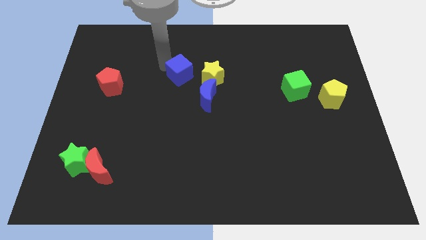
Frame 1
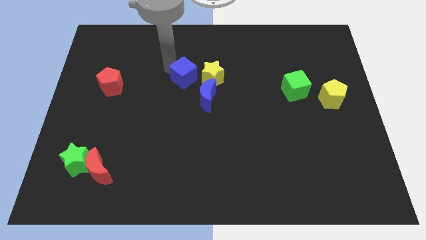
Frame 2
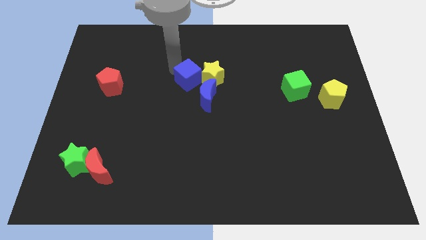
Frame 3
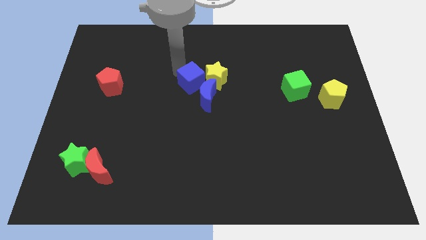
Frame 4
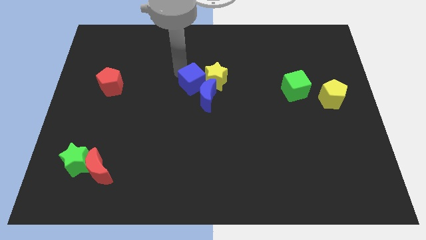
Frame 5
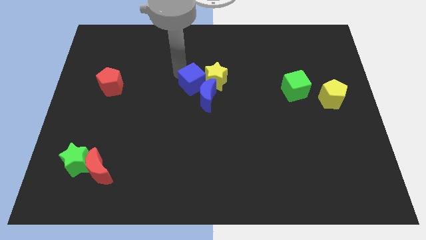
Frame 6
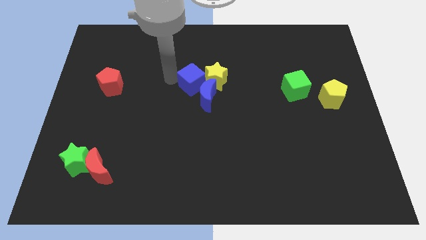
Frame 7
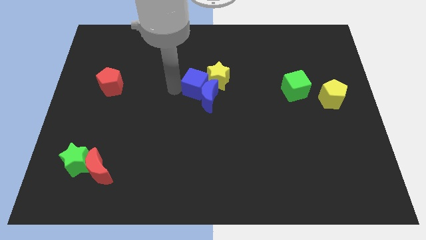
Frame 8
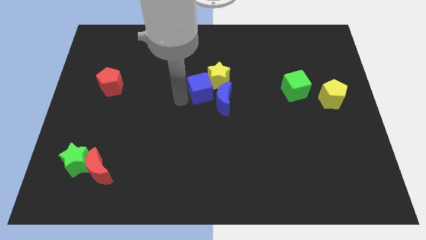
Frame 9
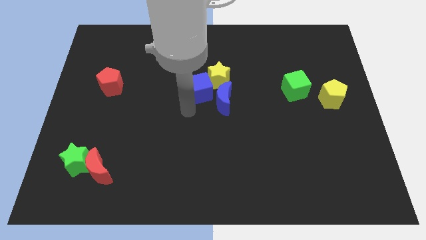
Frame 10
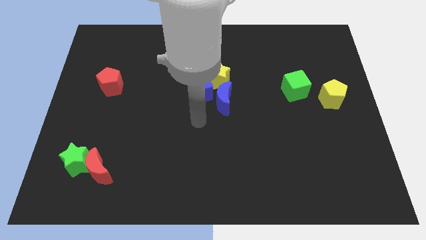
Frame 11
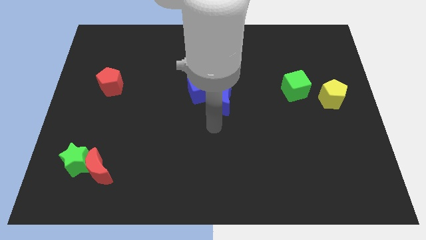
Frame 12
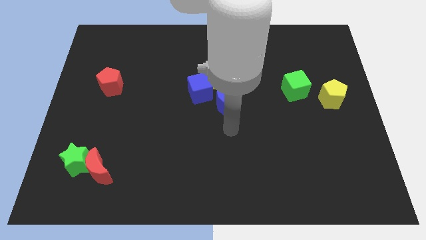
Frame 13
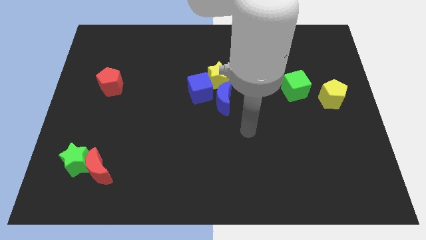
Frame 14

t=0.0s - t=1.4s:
slightly push the blue moon with a blue cube to the left of the yellow star

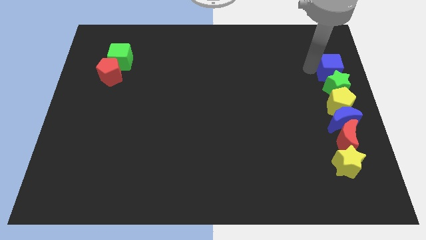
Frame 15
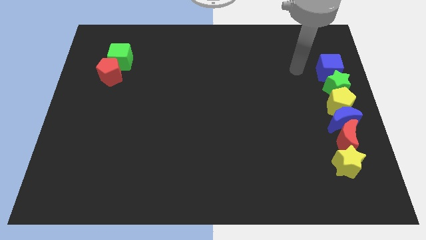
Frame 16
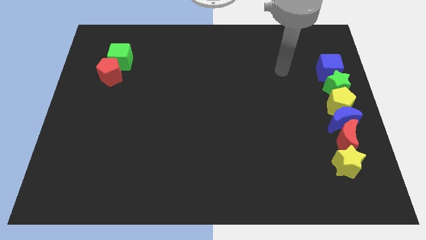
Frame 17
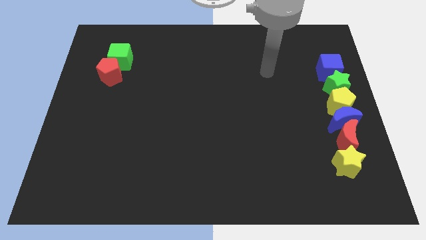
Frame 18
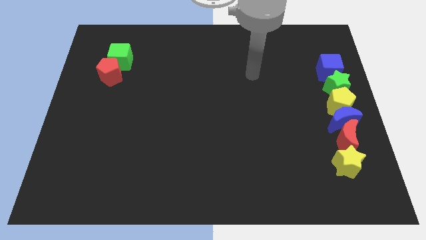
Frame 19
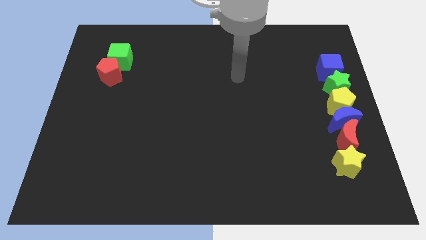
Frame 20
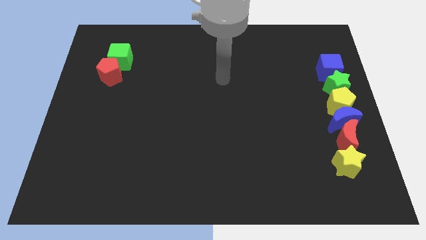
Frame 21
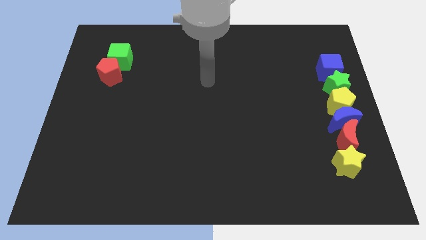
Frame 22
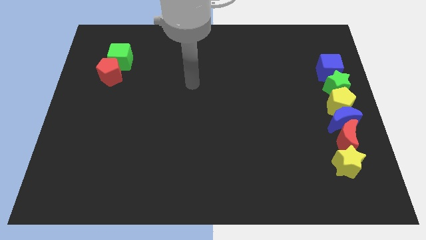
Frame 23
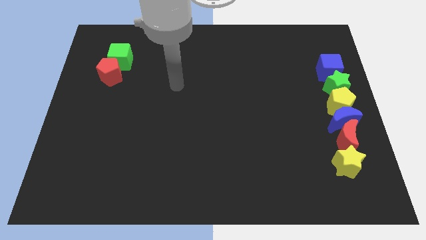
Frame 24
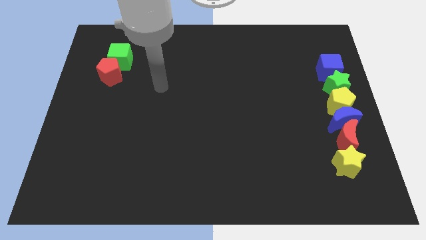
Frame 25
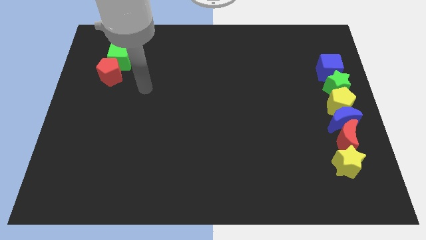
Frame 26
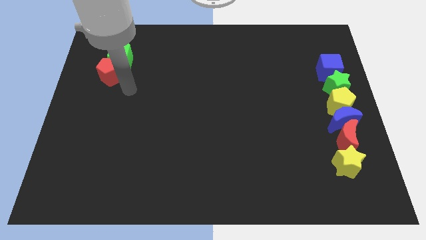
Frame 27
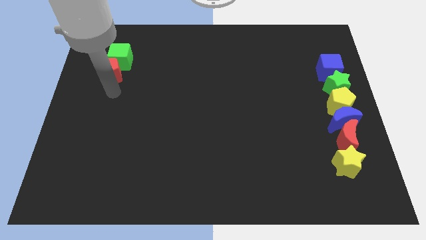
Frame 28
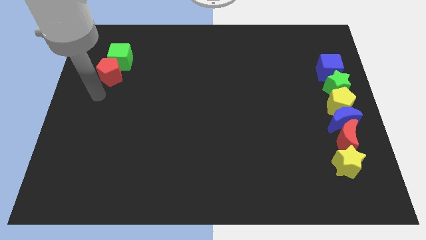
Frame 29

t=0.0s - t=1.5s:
point your arm below red pentagon

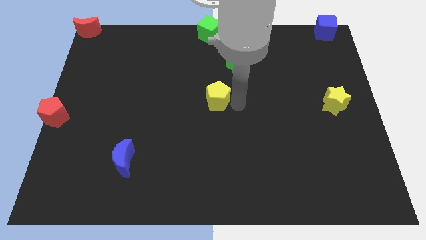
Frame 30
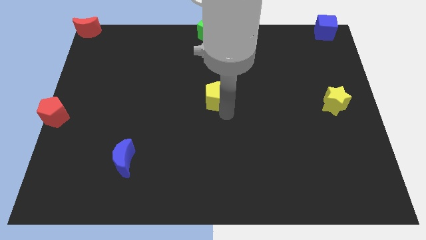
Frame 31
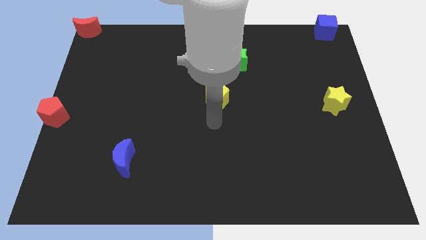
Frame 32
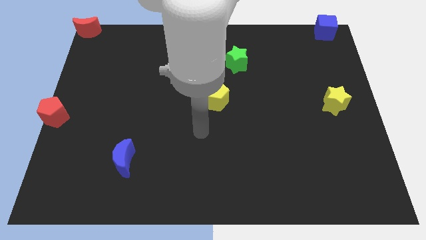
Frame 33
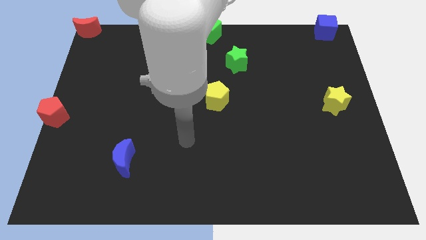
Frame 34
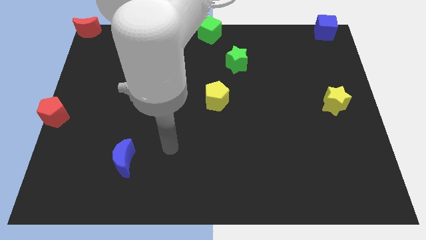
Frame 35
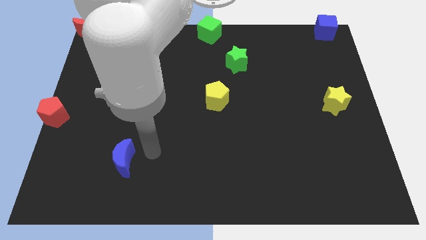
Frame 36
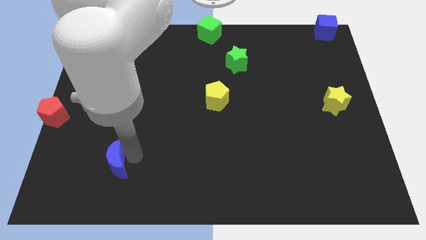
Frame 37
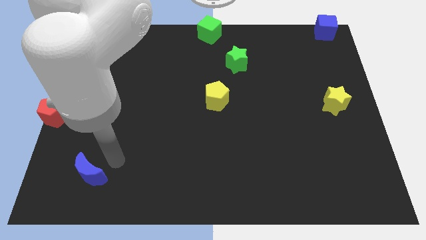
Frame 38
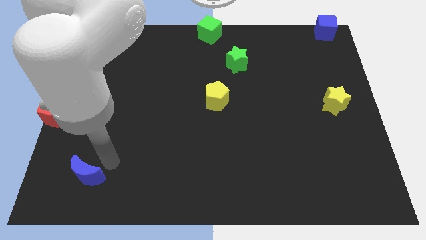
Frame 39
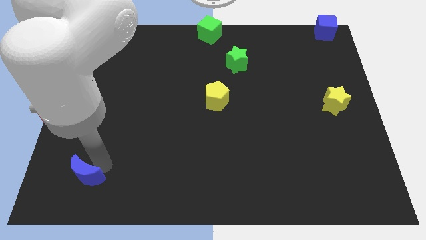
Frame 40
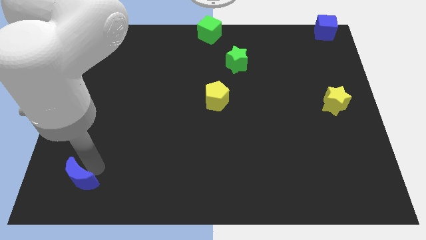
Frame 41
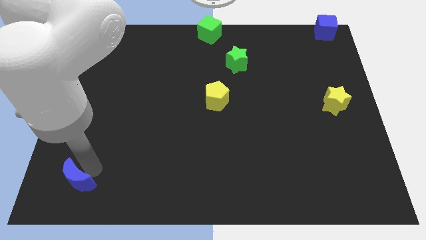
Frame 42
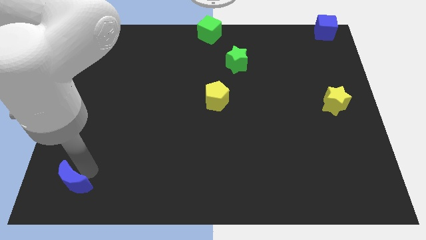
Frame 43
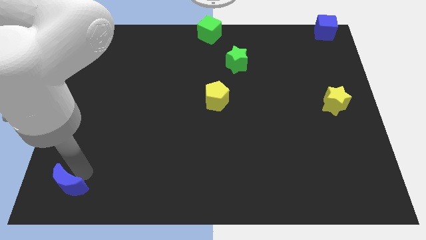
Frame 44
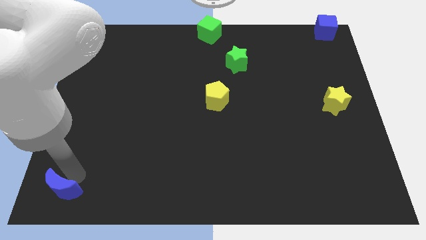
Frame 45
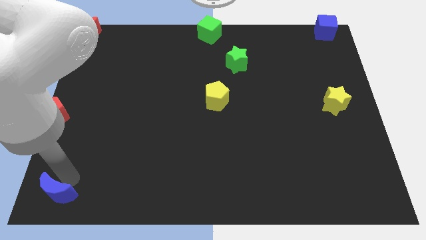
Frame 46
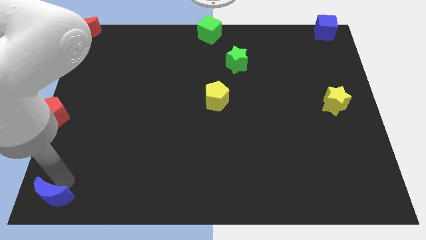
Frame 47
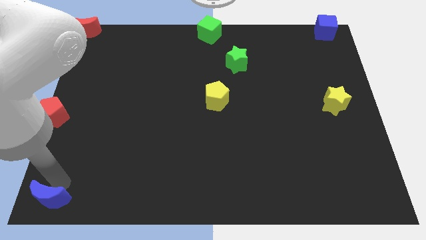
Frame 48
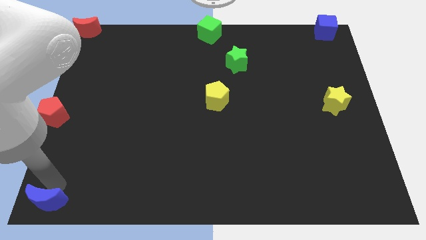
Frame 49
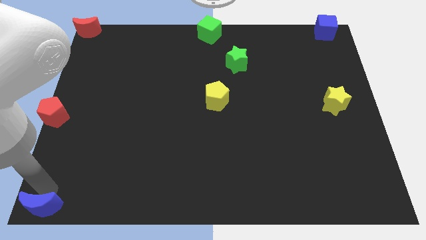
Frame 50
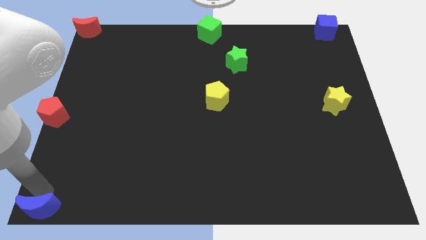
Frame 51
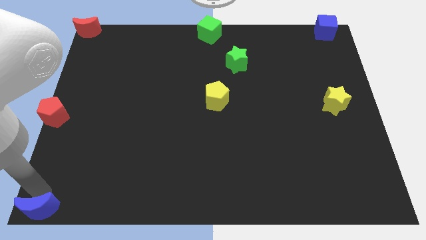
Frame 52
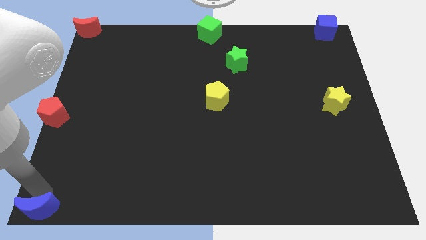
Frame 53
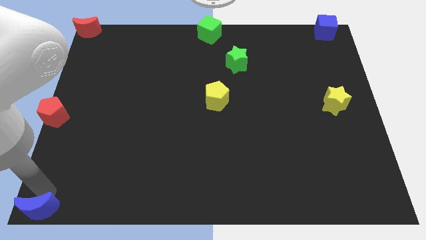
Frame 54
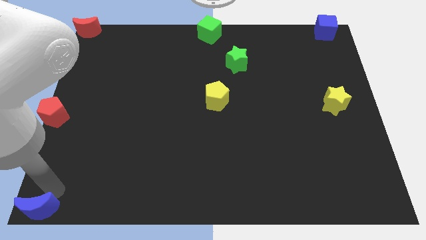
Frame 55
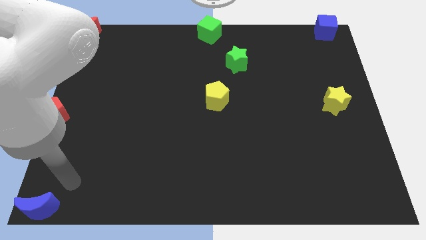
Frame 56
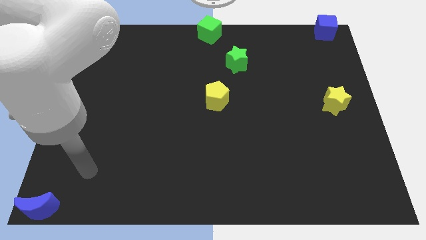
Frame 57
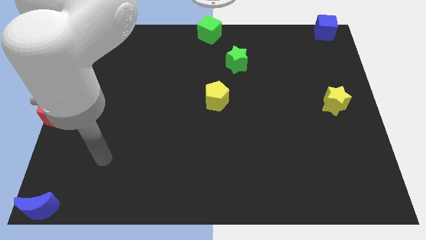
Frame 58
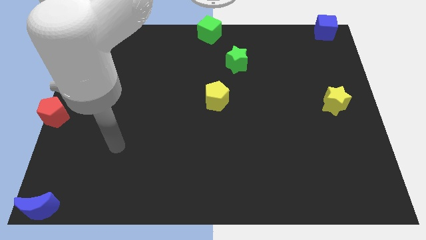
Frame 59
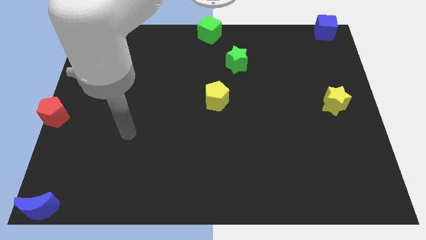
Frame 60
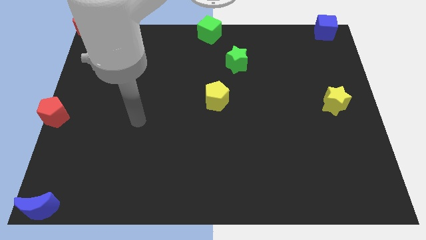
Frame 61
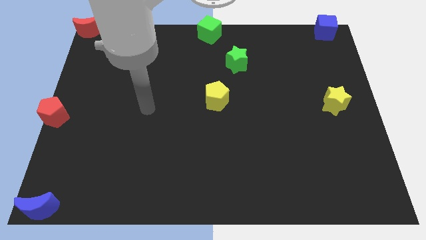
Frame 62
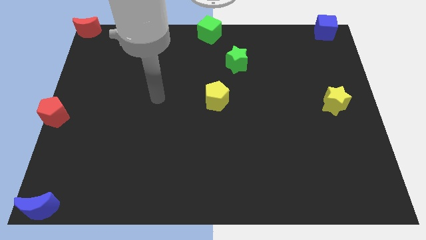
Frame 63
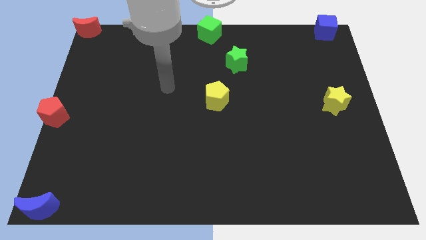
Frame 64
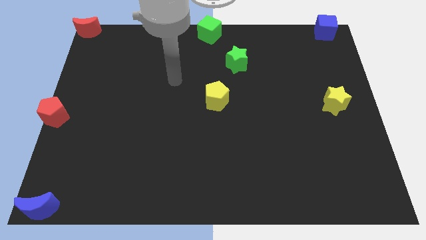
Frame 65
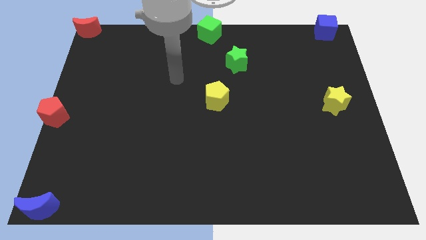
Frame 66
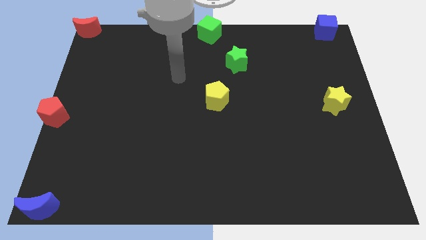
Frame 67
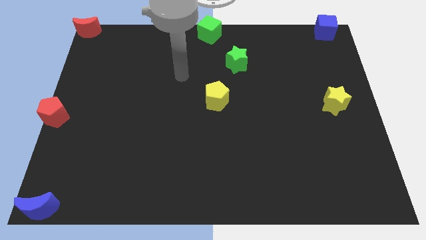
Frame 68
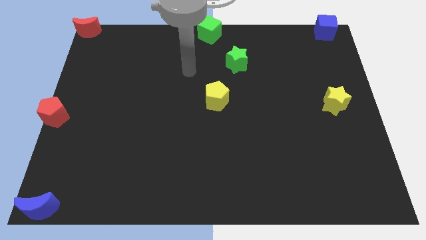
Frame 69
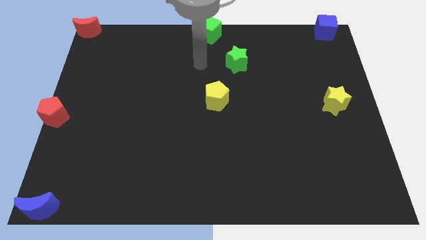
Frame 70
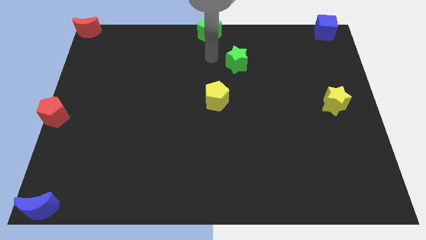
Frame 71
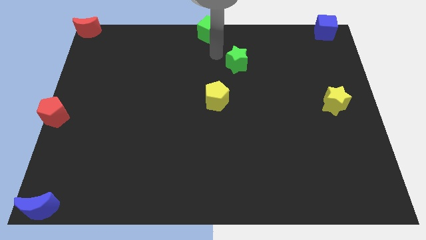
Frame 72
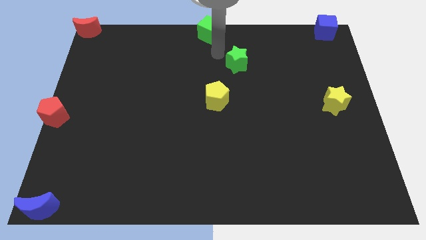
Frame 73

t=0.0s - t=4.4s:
move the blue crescent to the bottom left corner of the board

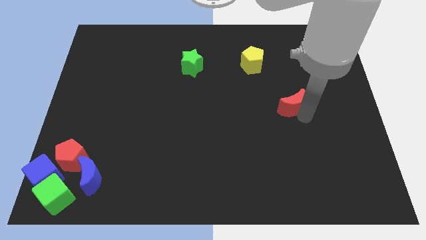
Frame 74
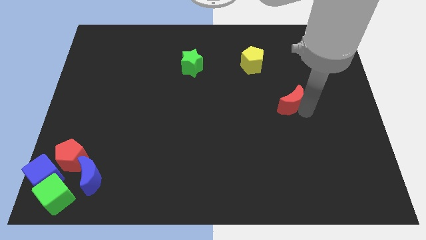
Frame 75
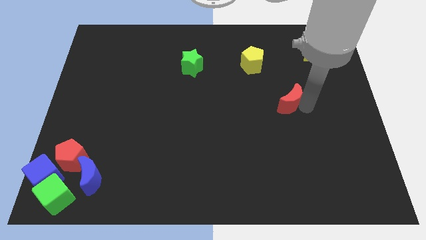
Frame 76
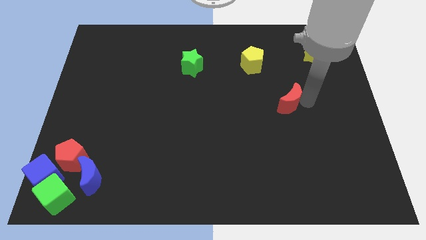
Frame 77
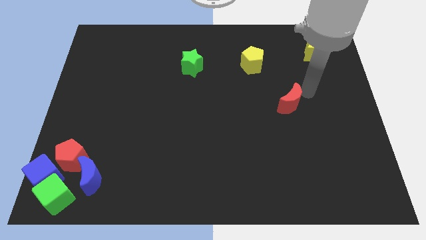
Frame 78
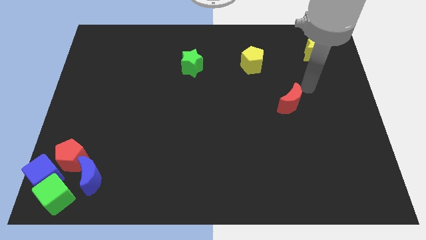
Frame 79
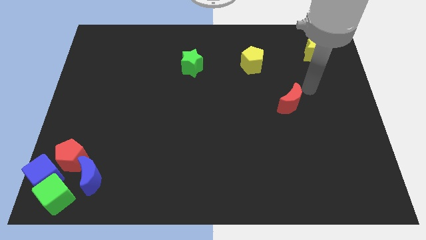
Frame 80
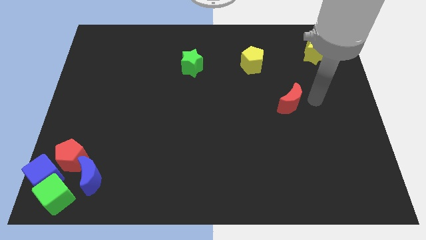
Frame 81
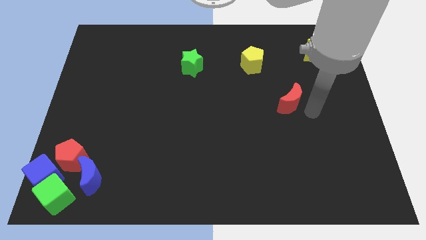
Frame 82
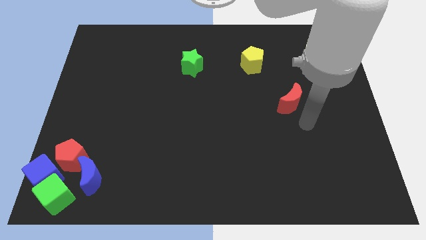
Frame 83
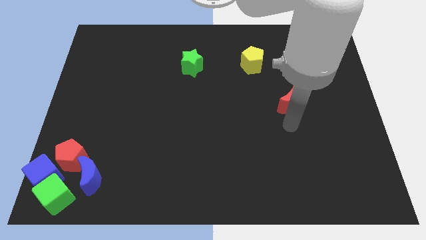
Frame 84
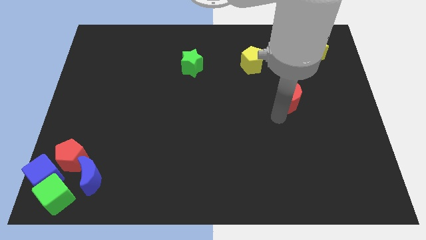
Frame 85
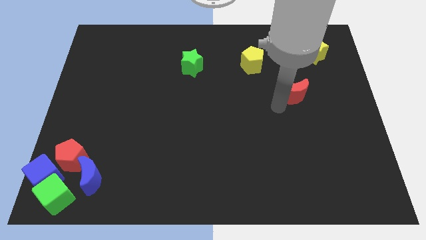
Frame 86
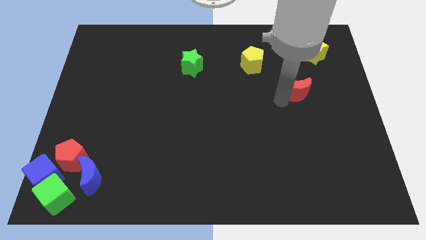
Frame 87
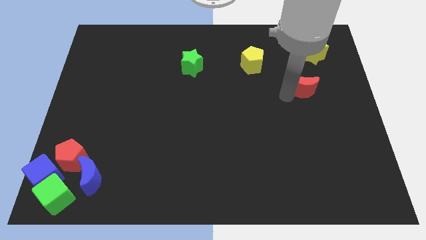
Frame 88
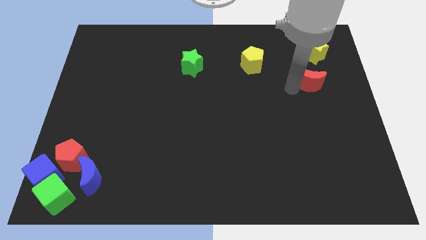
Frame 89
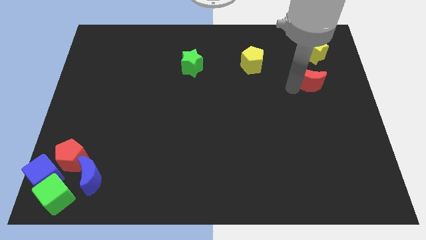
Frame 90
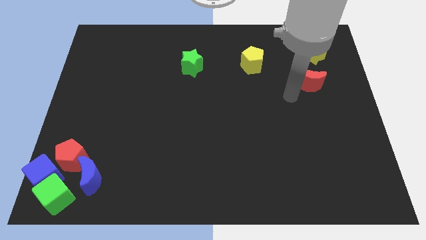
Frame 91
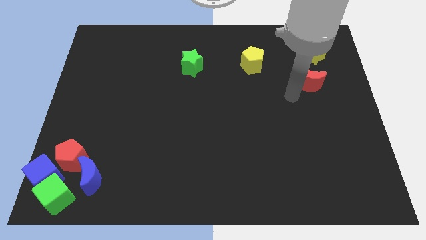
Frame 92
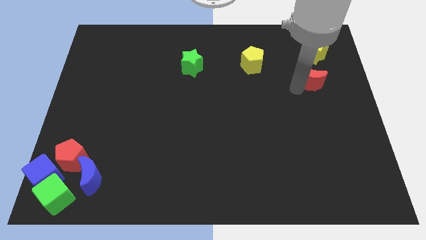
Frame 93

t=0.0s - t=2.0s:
push the red crescent to the bottom of the yellow star
